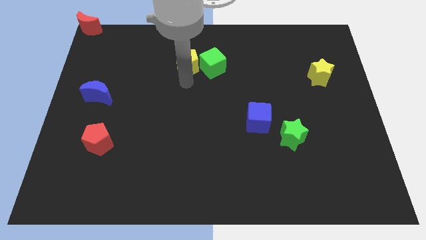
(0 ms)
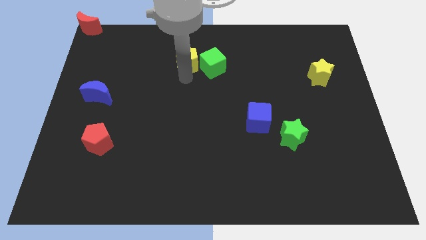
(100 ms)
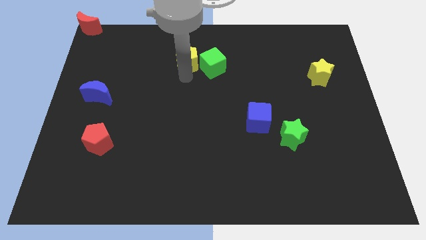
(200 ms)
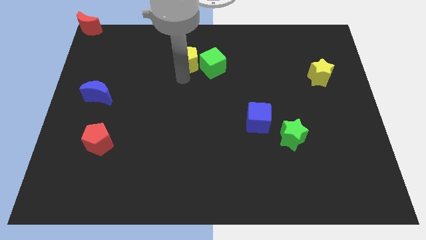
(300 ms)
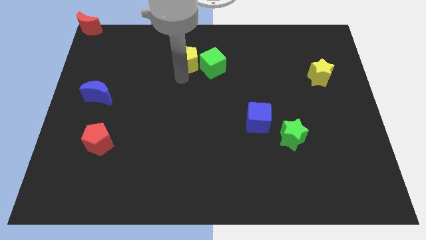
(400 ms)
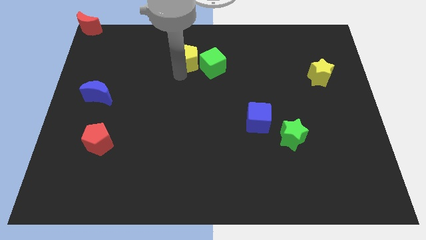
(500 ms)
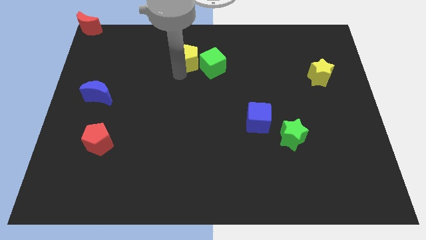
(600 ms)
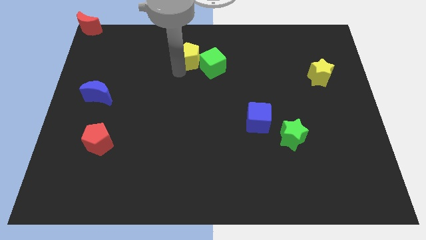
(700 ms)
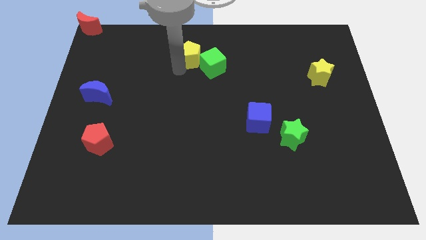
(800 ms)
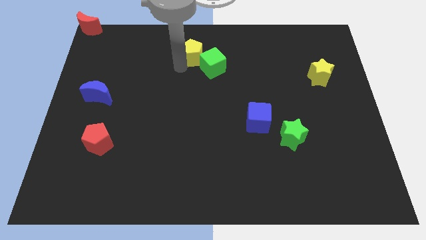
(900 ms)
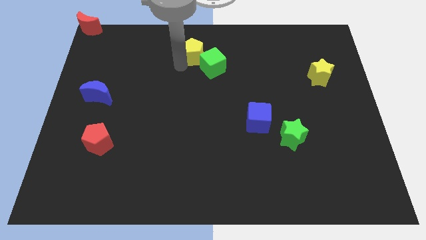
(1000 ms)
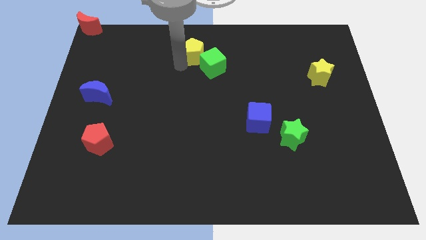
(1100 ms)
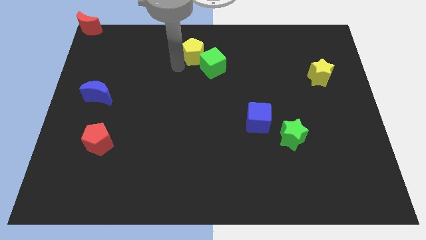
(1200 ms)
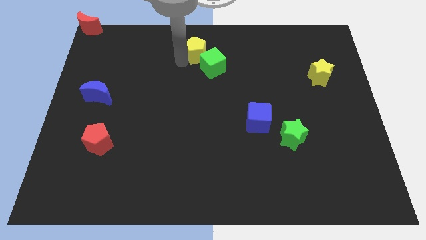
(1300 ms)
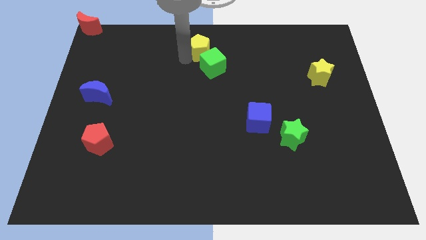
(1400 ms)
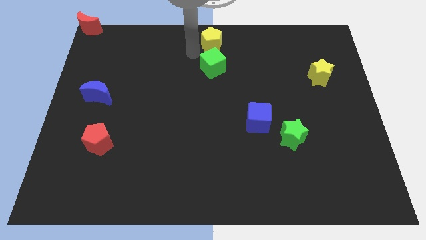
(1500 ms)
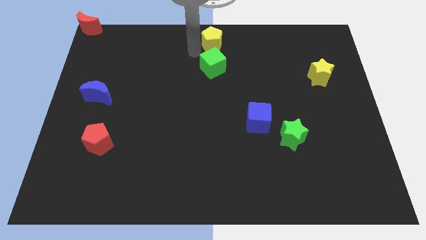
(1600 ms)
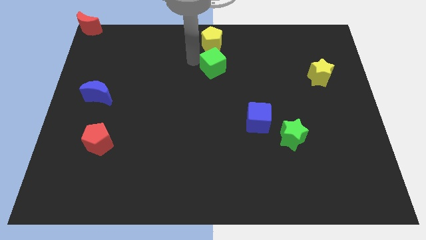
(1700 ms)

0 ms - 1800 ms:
put the yellow pentagon above the green cube

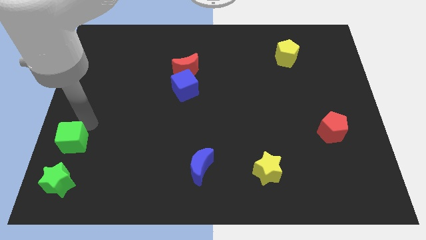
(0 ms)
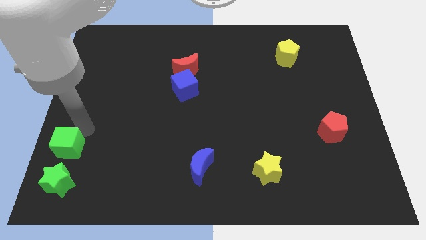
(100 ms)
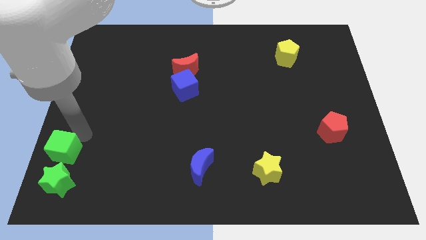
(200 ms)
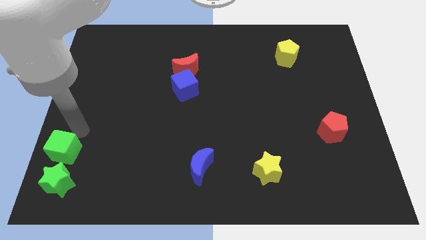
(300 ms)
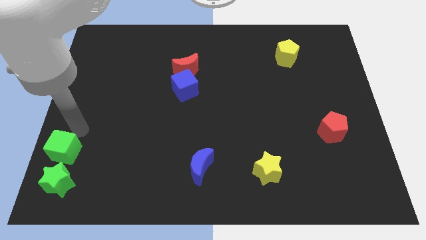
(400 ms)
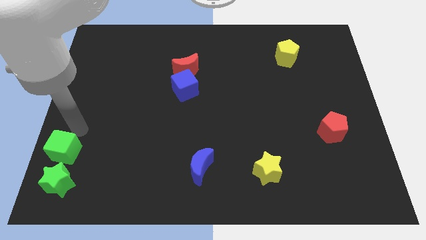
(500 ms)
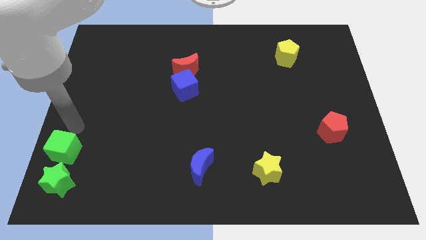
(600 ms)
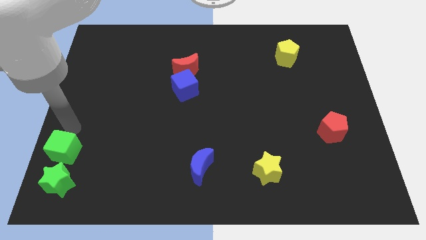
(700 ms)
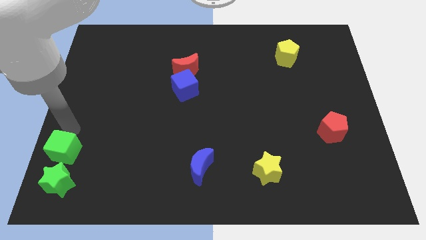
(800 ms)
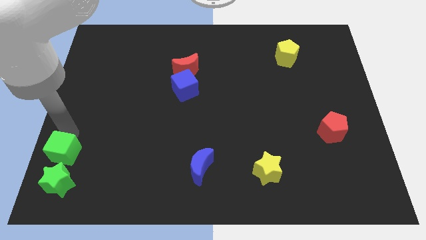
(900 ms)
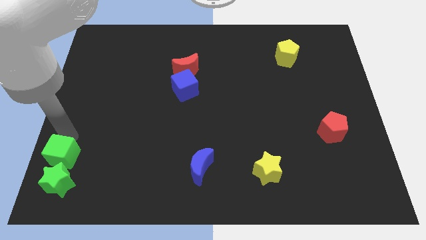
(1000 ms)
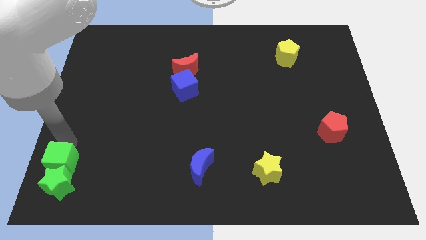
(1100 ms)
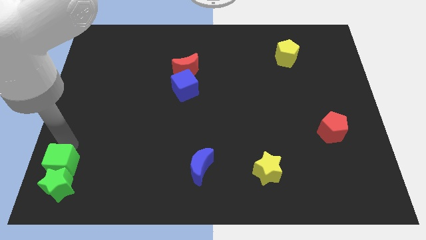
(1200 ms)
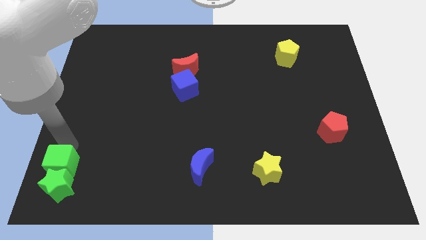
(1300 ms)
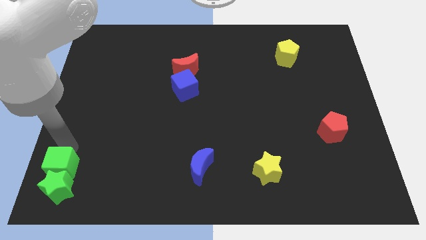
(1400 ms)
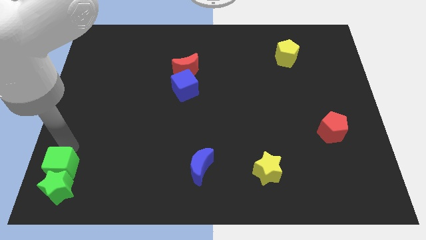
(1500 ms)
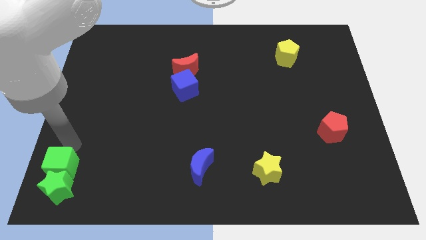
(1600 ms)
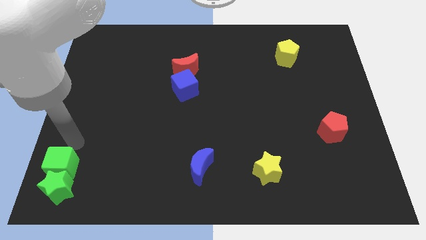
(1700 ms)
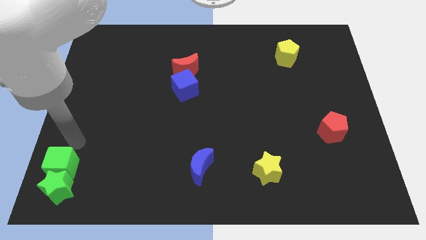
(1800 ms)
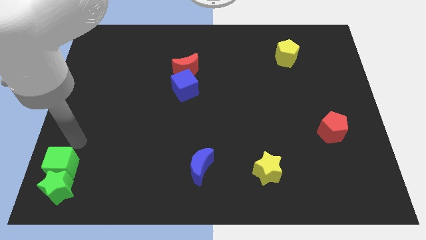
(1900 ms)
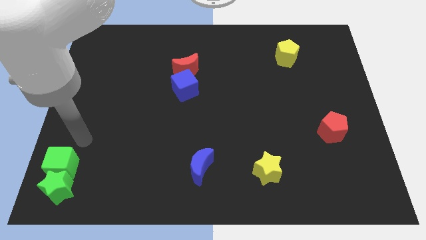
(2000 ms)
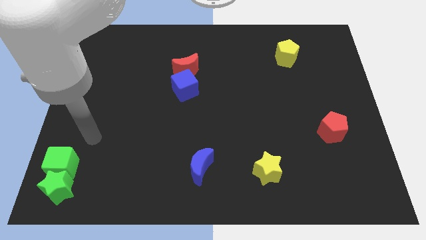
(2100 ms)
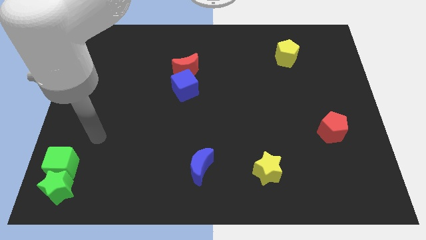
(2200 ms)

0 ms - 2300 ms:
push the green cube into the green star

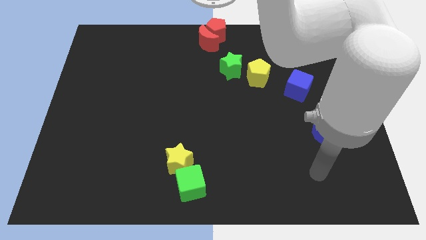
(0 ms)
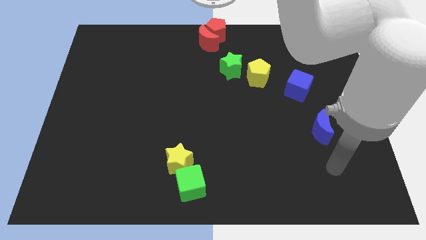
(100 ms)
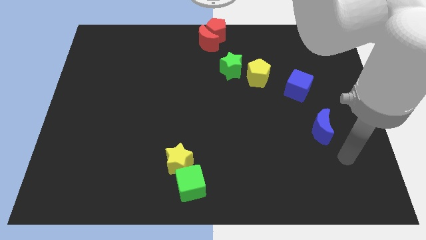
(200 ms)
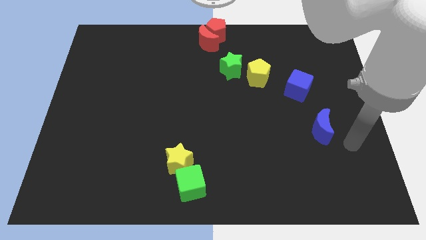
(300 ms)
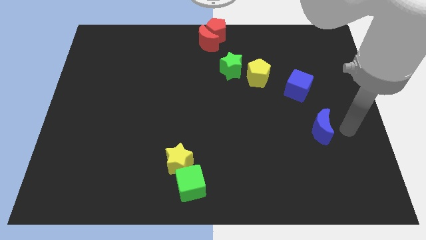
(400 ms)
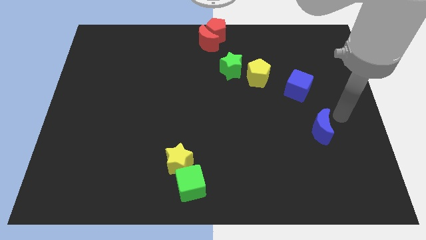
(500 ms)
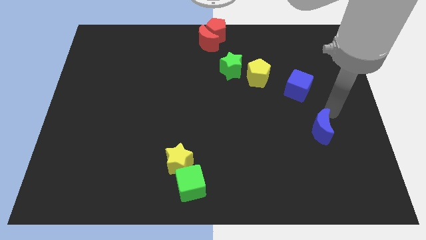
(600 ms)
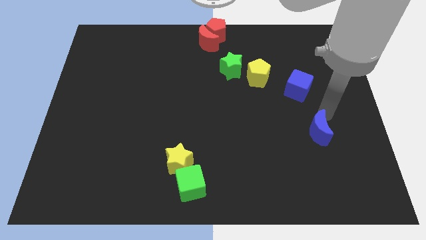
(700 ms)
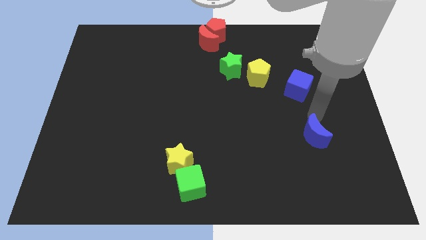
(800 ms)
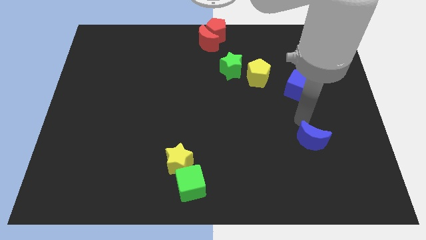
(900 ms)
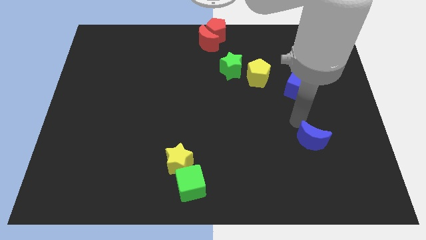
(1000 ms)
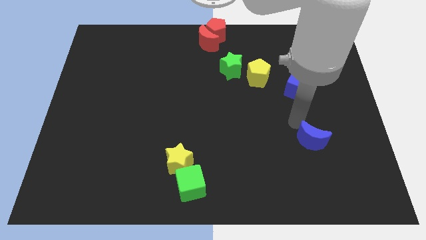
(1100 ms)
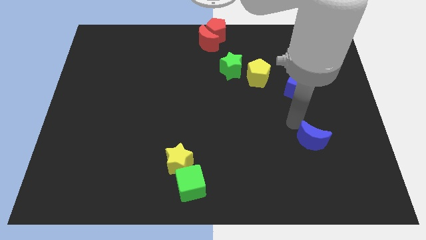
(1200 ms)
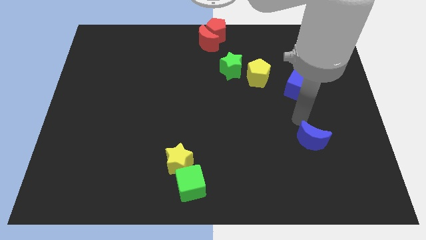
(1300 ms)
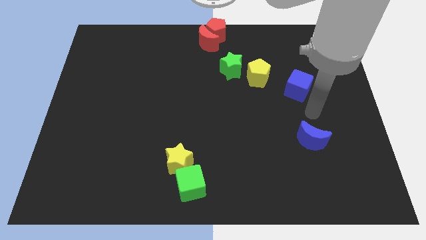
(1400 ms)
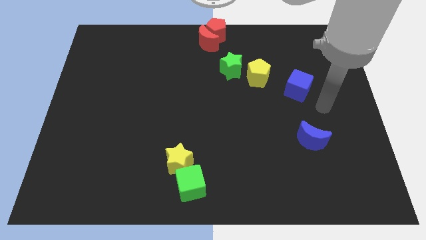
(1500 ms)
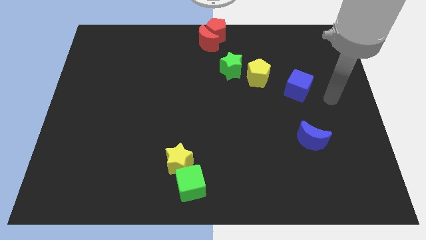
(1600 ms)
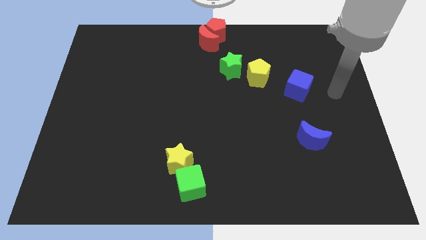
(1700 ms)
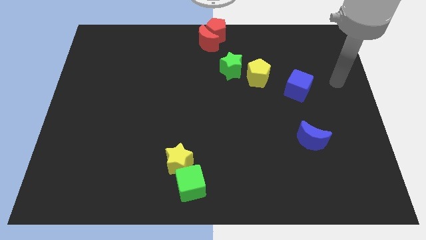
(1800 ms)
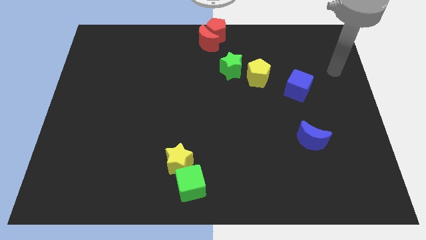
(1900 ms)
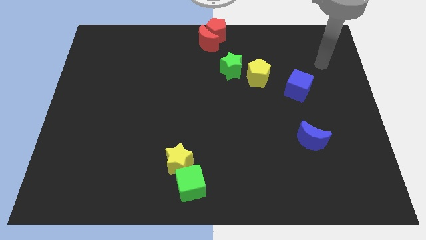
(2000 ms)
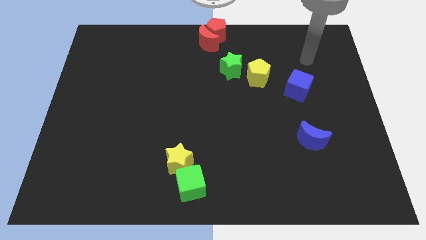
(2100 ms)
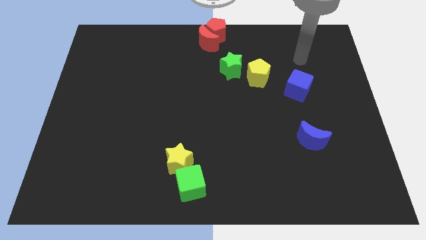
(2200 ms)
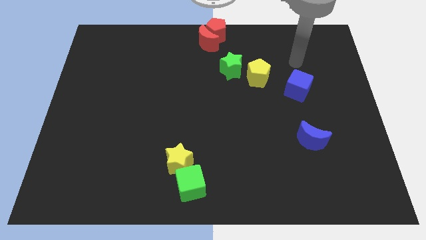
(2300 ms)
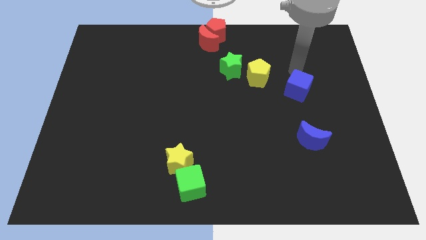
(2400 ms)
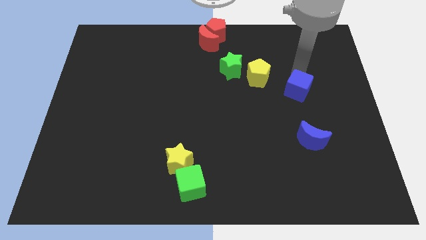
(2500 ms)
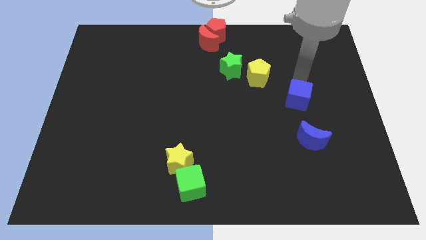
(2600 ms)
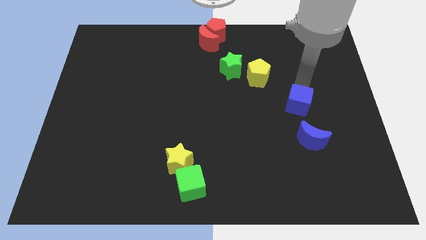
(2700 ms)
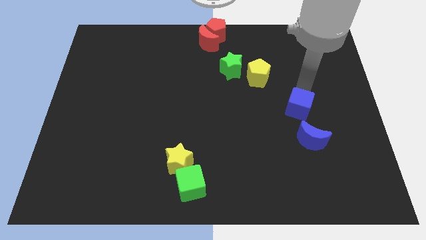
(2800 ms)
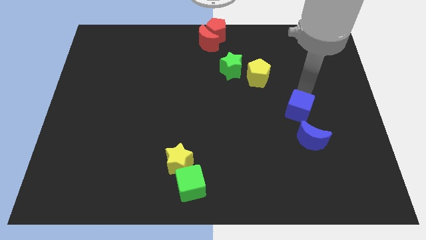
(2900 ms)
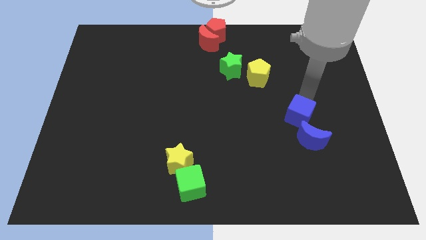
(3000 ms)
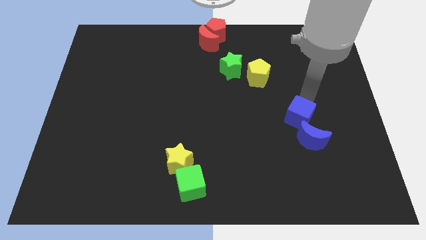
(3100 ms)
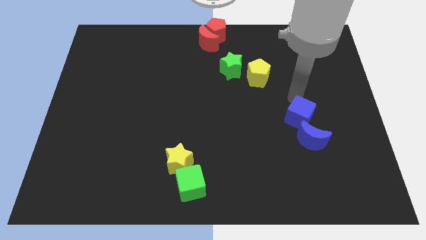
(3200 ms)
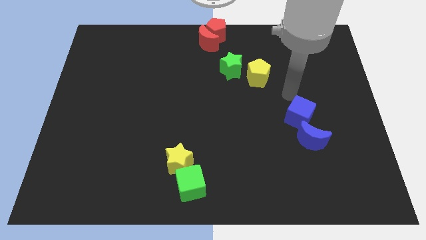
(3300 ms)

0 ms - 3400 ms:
push the blue cube into the blue moon

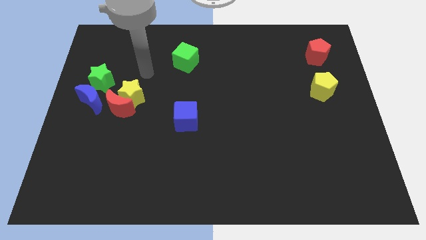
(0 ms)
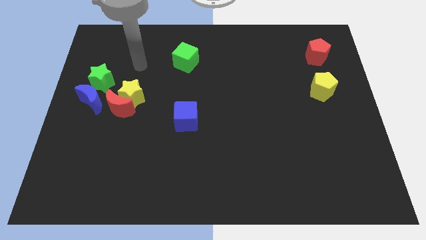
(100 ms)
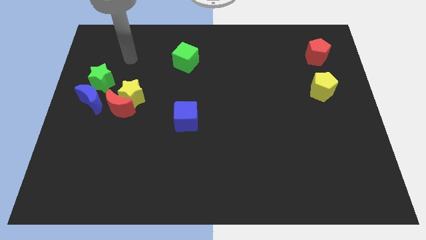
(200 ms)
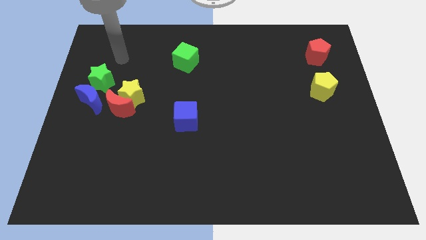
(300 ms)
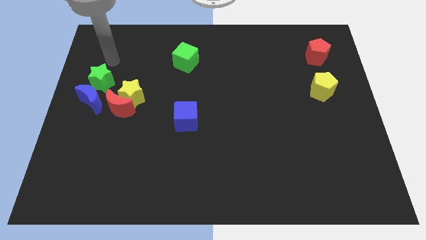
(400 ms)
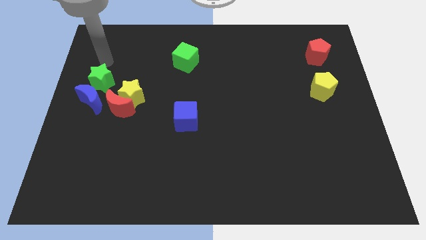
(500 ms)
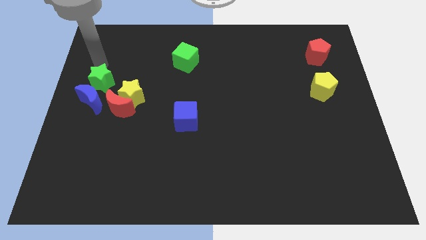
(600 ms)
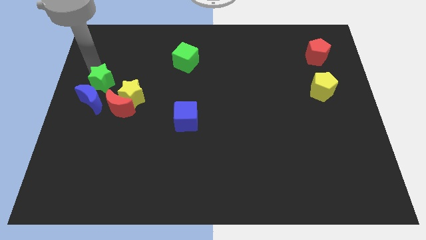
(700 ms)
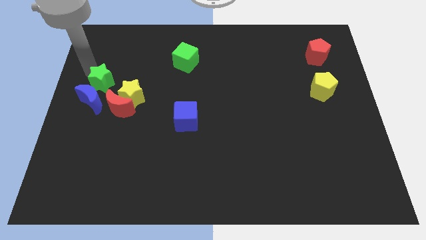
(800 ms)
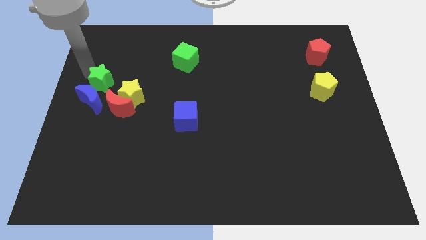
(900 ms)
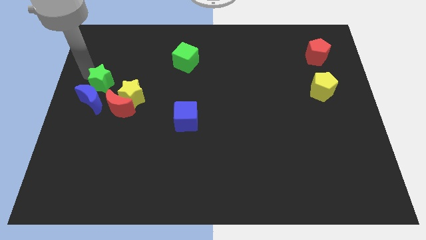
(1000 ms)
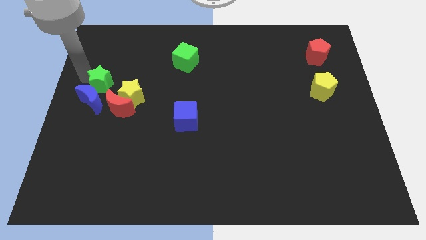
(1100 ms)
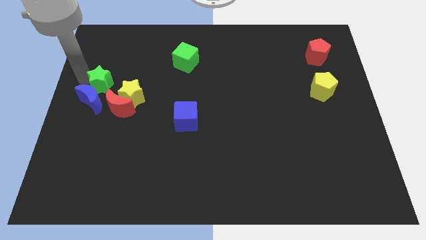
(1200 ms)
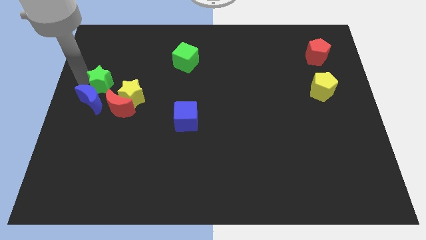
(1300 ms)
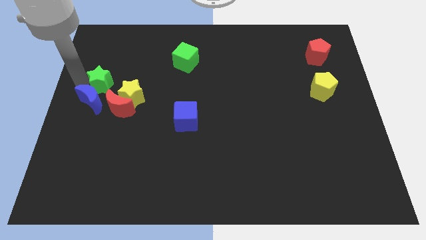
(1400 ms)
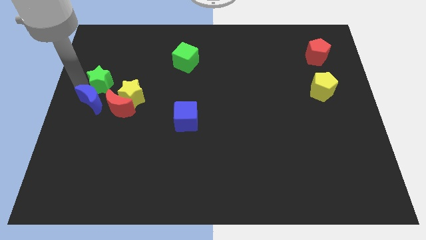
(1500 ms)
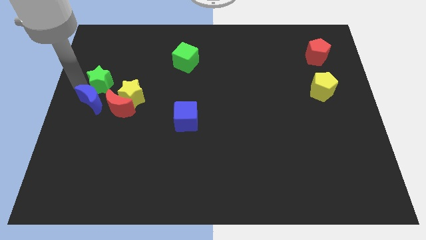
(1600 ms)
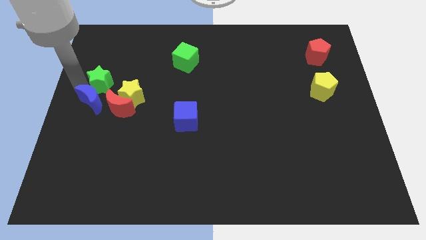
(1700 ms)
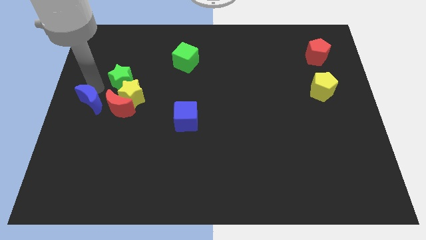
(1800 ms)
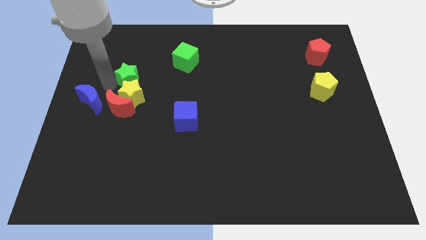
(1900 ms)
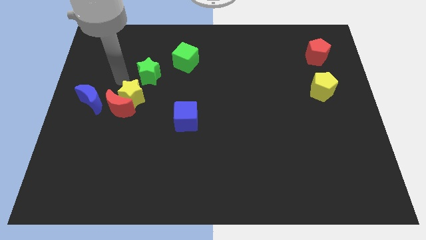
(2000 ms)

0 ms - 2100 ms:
place the green star above the yellow star
